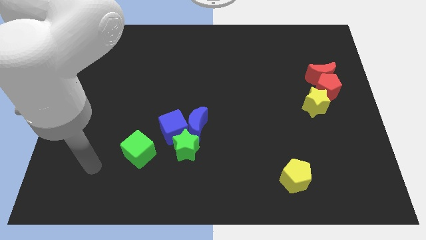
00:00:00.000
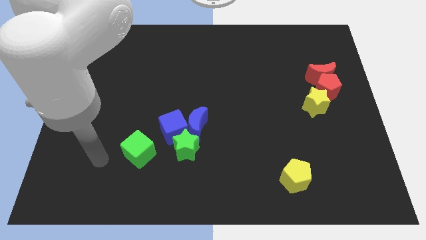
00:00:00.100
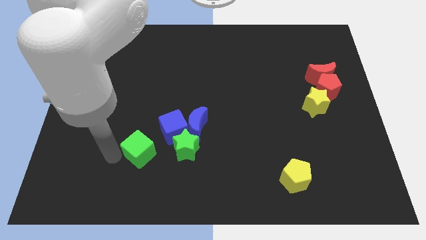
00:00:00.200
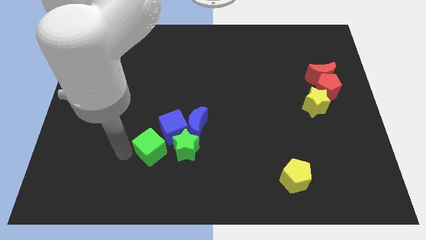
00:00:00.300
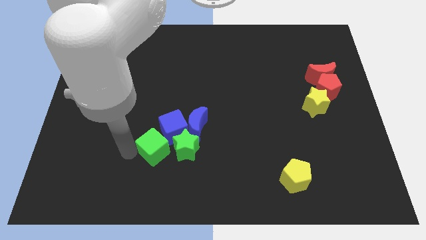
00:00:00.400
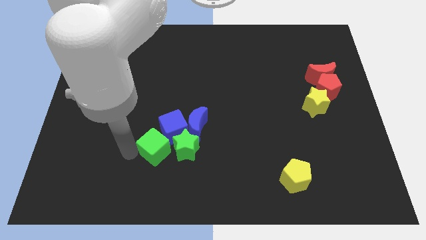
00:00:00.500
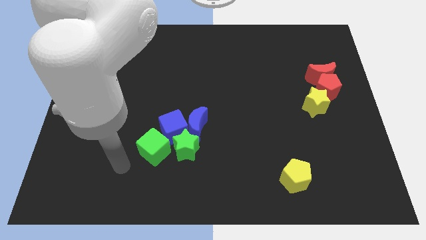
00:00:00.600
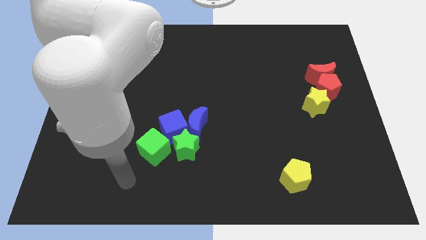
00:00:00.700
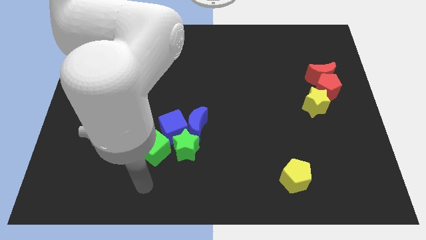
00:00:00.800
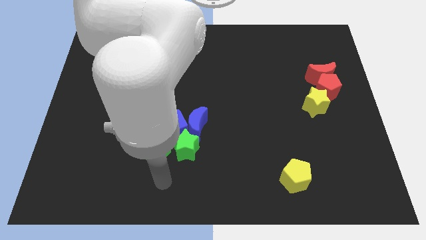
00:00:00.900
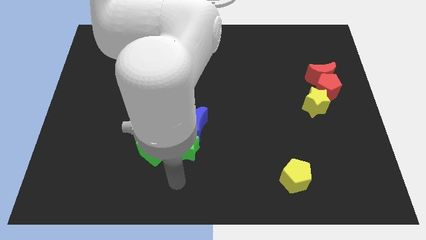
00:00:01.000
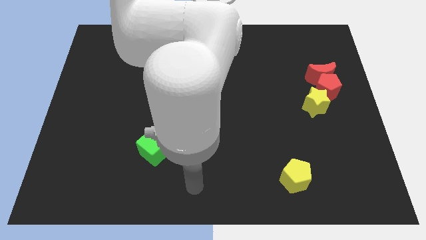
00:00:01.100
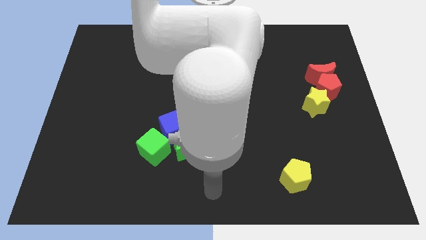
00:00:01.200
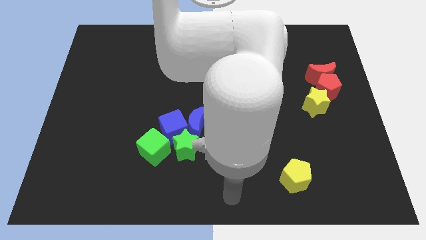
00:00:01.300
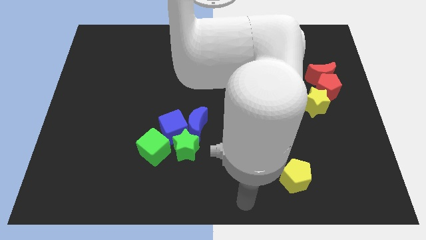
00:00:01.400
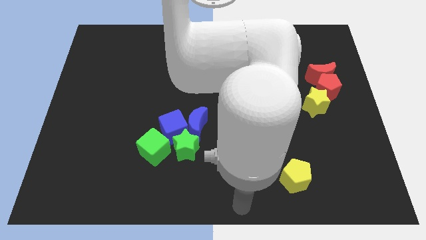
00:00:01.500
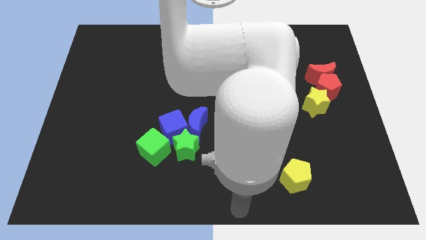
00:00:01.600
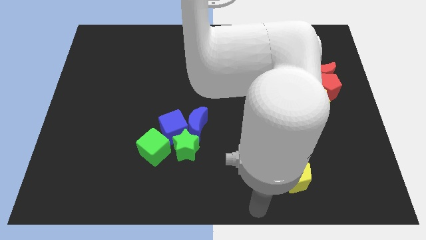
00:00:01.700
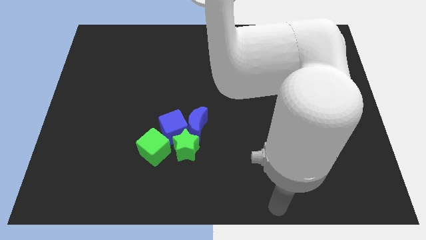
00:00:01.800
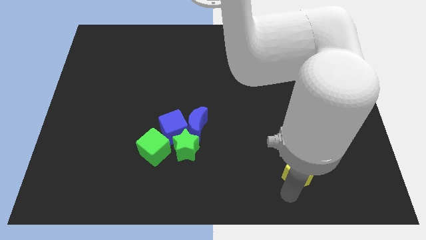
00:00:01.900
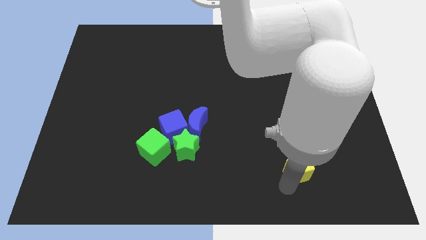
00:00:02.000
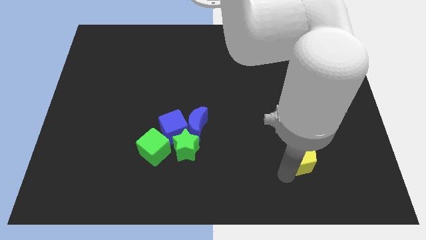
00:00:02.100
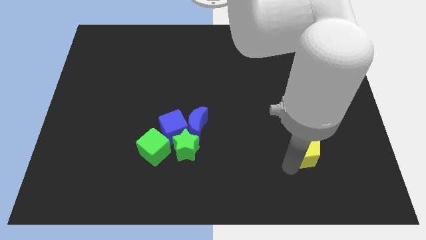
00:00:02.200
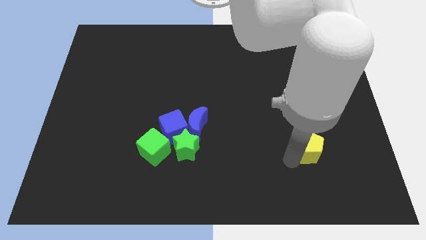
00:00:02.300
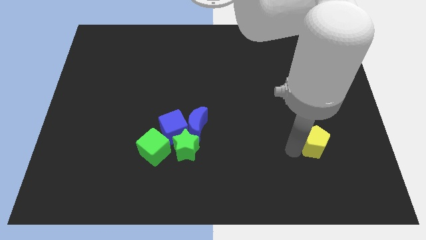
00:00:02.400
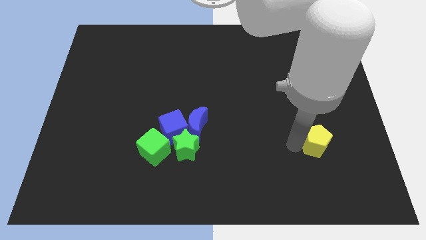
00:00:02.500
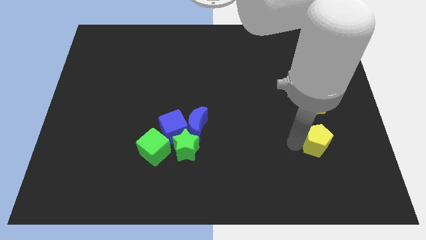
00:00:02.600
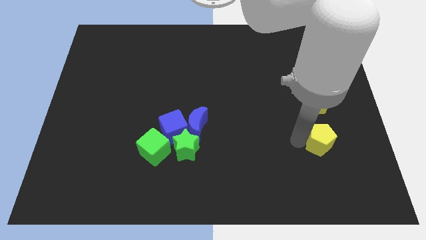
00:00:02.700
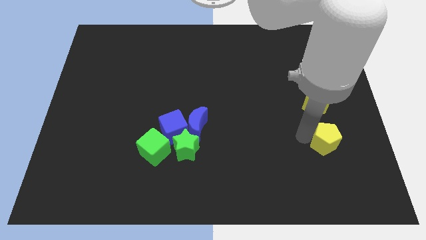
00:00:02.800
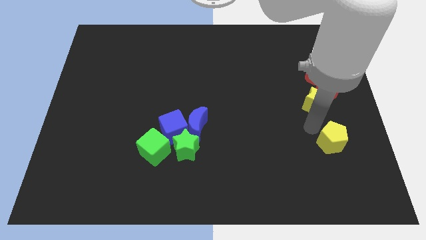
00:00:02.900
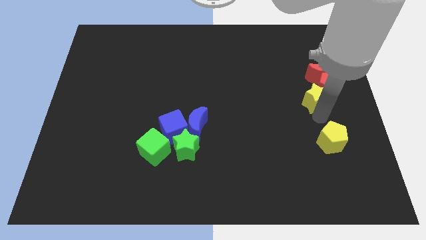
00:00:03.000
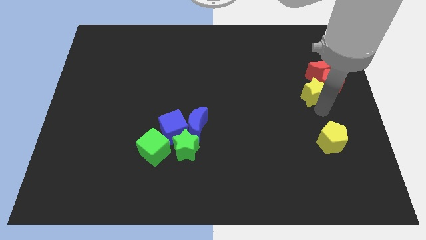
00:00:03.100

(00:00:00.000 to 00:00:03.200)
move yellow pentagon below yellow star

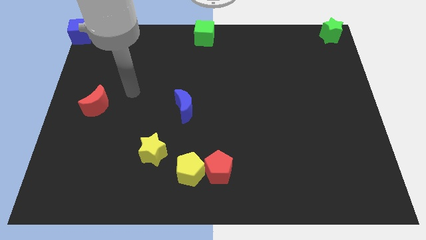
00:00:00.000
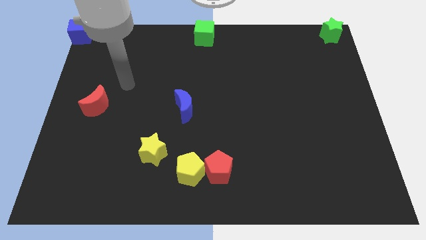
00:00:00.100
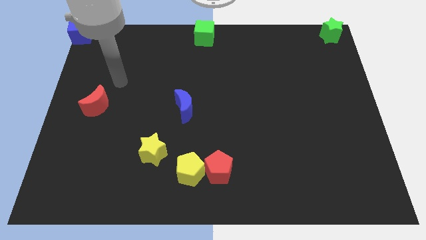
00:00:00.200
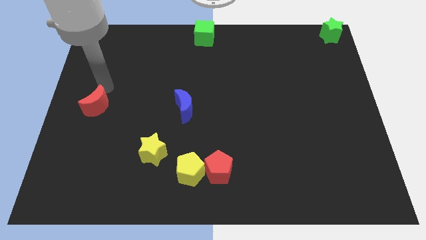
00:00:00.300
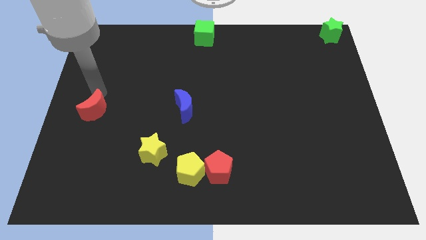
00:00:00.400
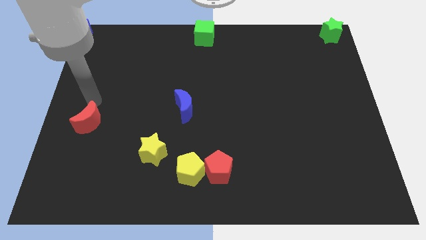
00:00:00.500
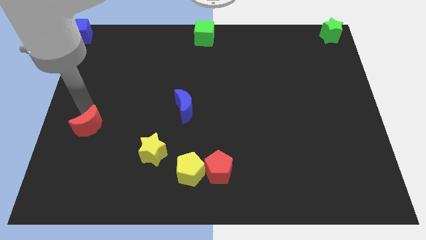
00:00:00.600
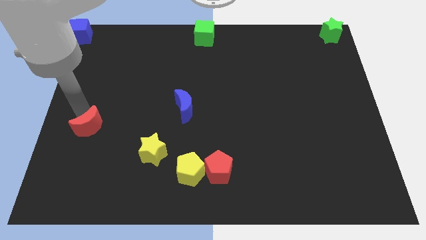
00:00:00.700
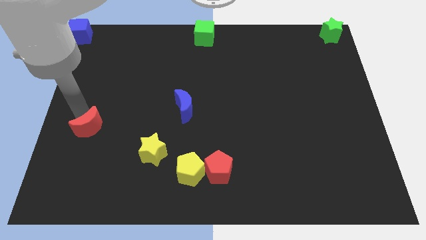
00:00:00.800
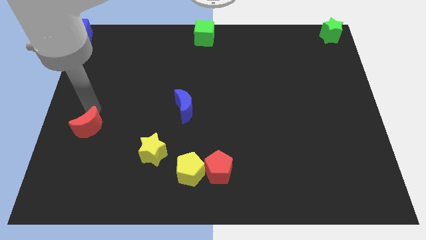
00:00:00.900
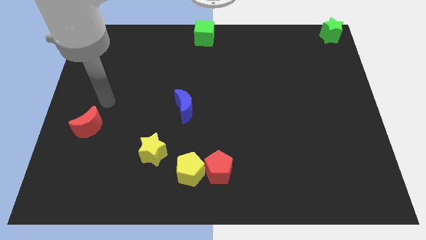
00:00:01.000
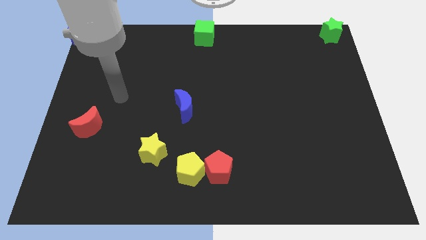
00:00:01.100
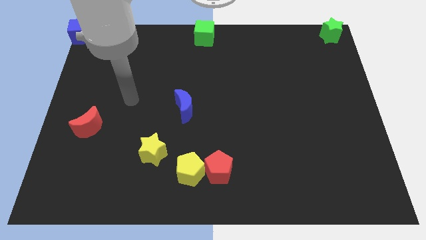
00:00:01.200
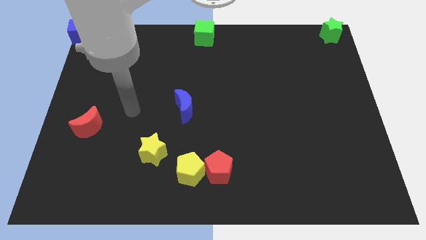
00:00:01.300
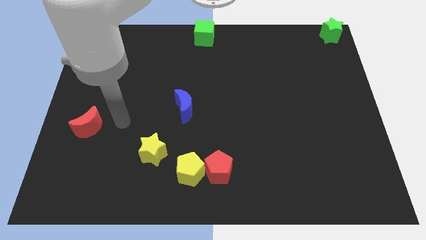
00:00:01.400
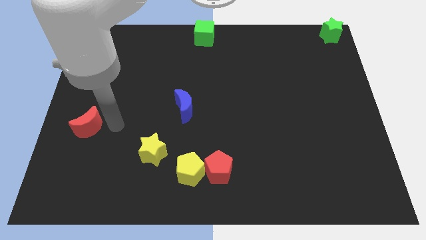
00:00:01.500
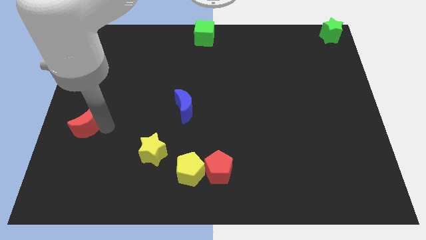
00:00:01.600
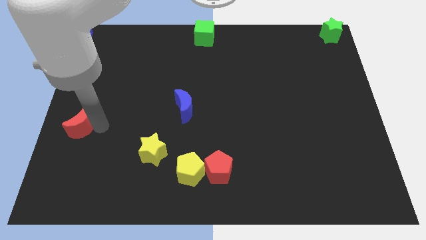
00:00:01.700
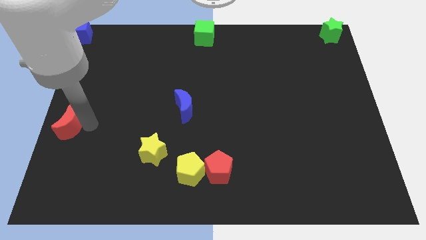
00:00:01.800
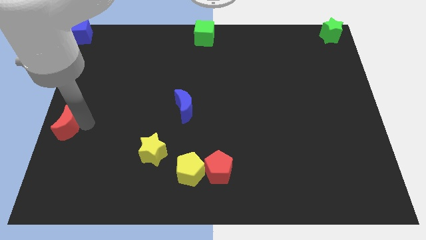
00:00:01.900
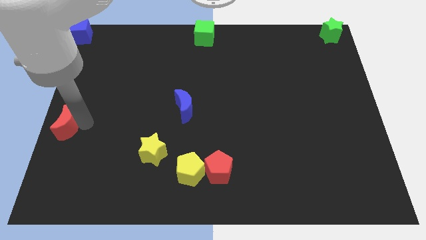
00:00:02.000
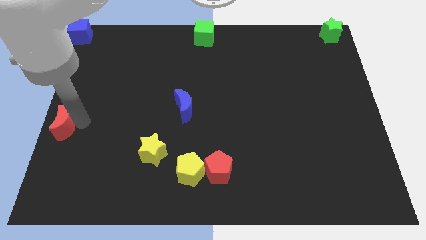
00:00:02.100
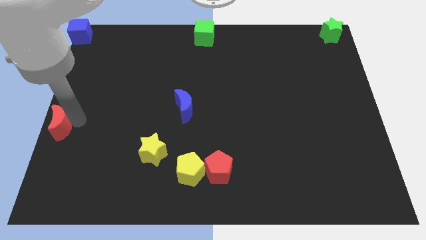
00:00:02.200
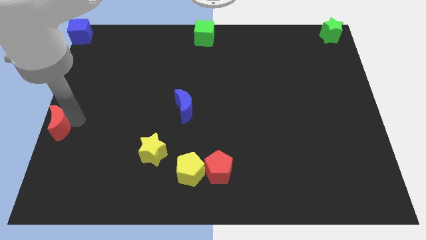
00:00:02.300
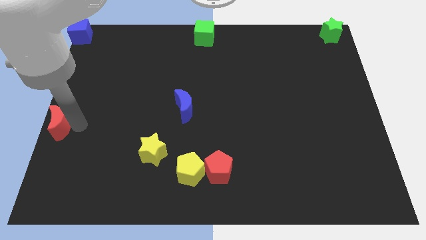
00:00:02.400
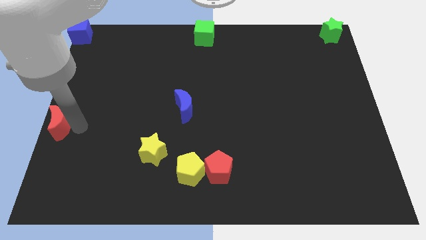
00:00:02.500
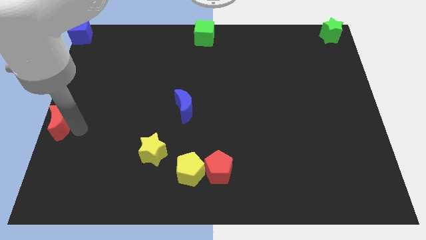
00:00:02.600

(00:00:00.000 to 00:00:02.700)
put the red moon to the left center of the board

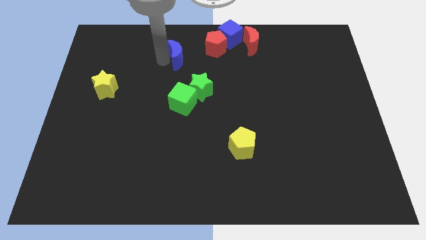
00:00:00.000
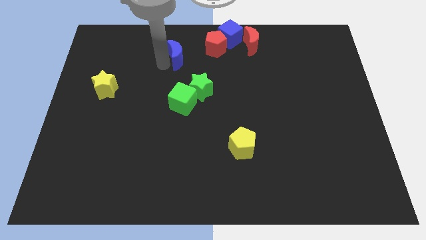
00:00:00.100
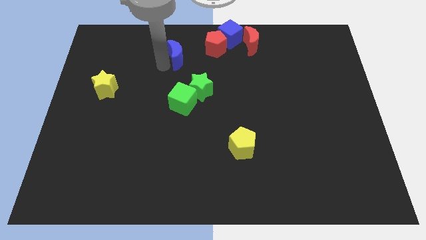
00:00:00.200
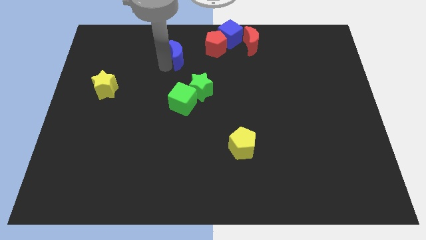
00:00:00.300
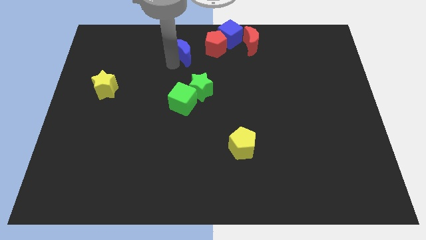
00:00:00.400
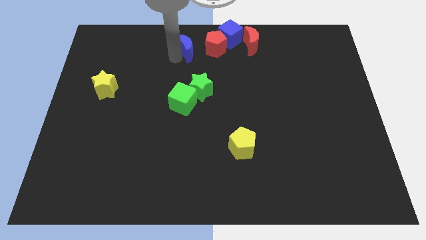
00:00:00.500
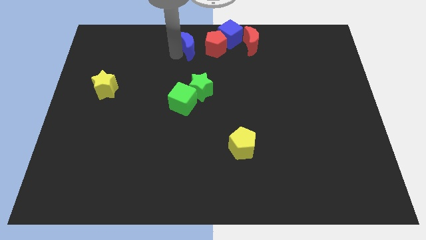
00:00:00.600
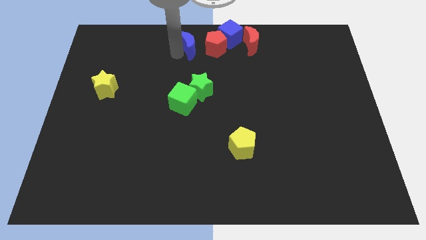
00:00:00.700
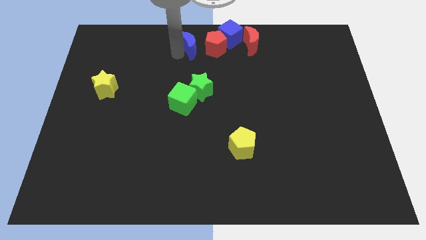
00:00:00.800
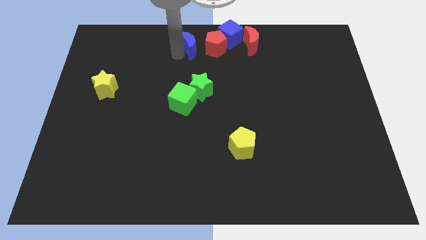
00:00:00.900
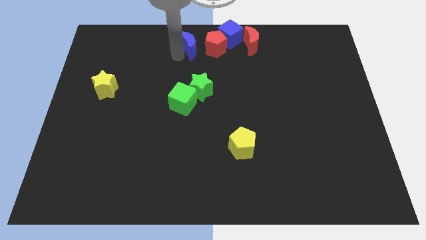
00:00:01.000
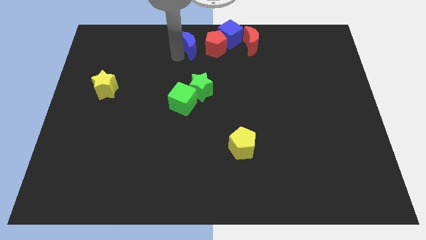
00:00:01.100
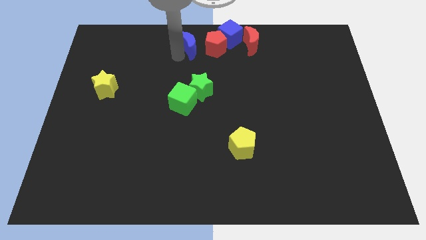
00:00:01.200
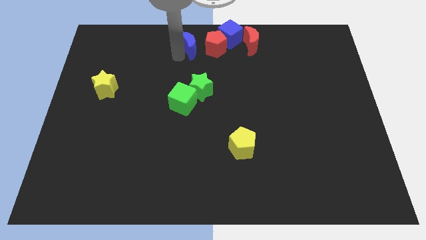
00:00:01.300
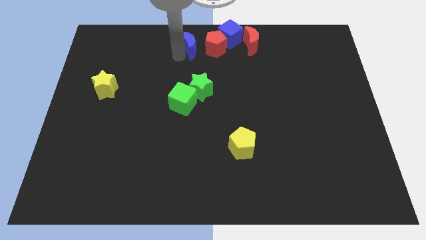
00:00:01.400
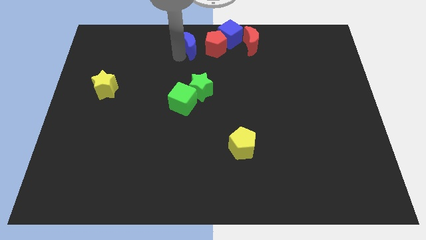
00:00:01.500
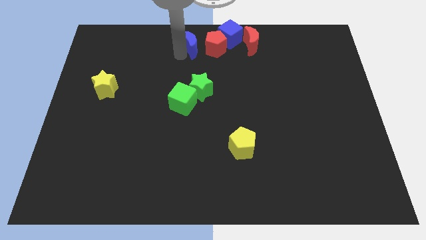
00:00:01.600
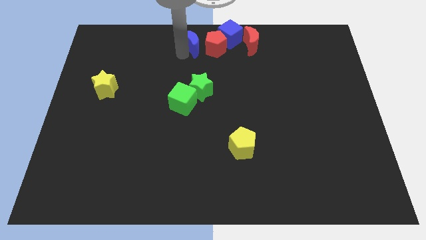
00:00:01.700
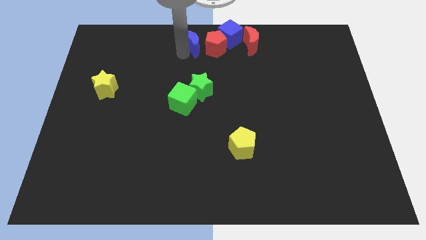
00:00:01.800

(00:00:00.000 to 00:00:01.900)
move the blue crescent to the left side of the red pentagon

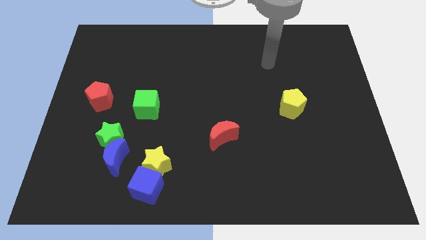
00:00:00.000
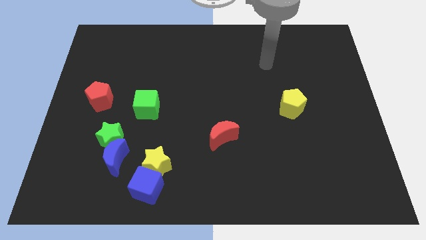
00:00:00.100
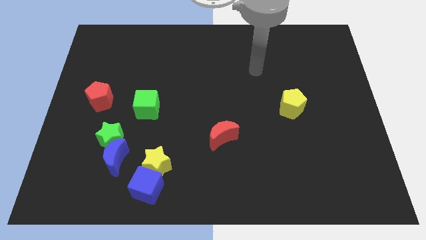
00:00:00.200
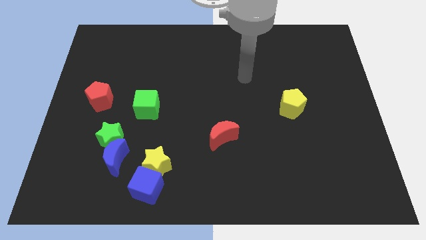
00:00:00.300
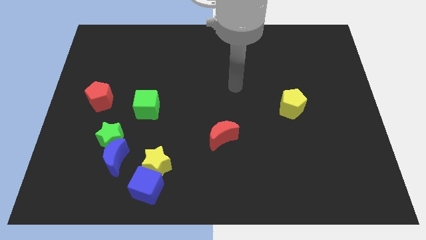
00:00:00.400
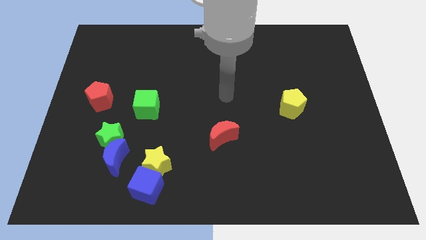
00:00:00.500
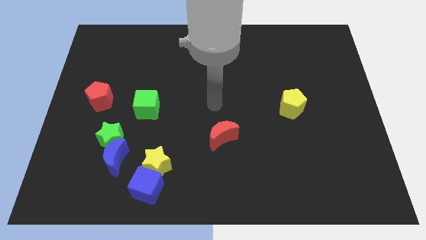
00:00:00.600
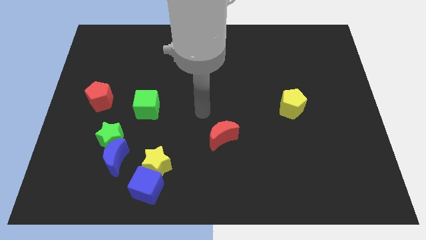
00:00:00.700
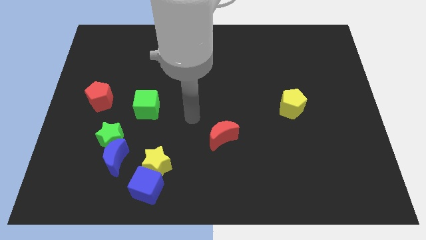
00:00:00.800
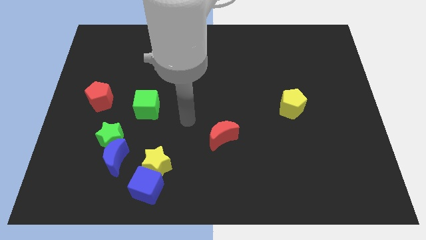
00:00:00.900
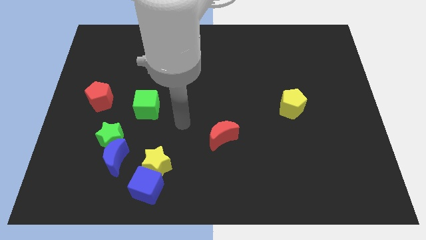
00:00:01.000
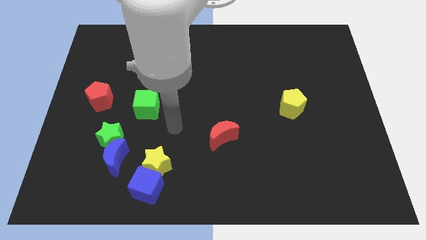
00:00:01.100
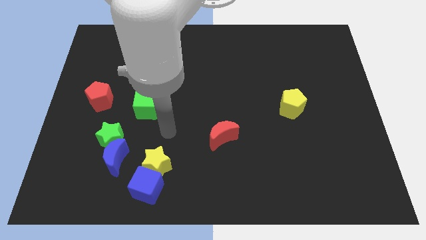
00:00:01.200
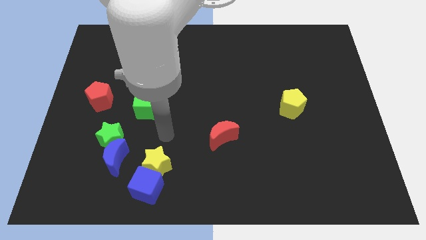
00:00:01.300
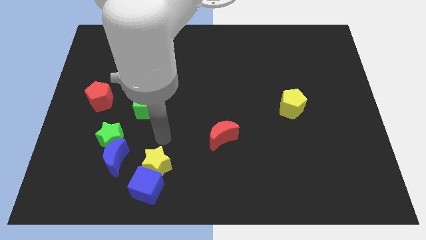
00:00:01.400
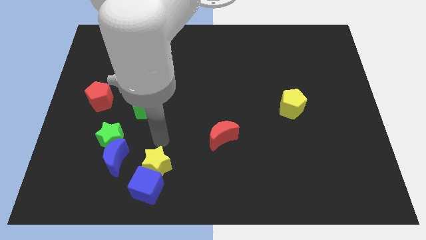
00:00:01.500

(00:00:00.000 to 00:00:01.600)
point your arm at the top of yellow star
